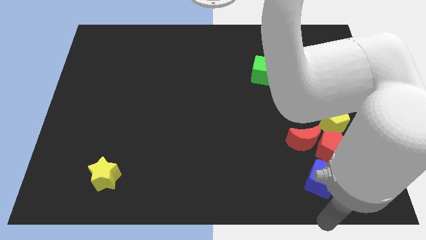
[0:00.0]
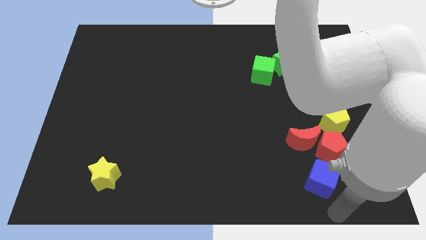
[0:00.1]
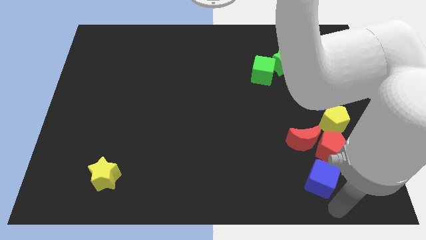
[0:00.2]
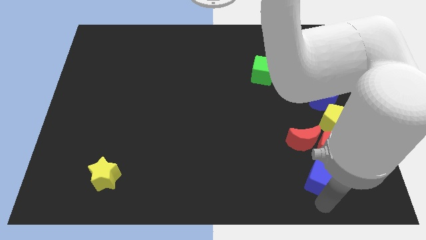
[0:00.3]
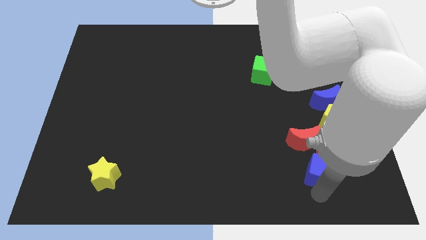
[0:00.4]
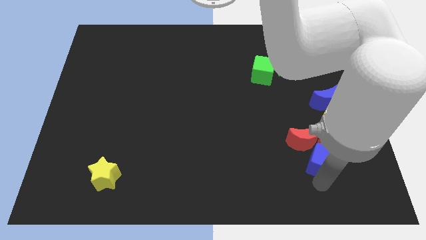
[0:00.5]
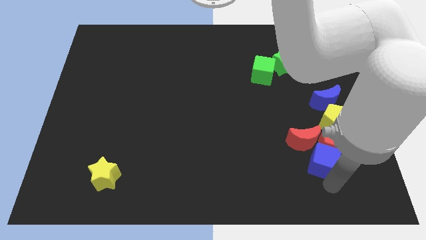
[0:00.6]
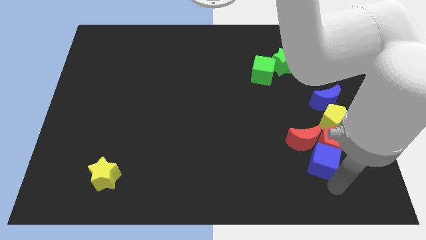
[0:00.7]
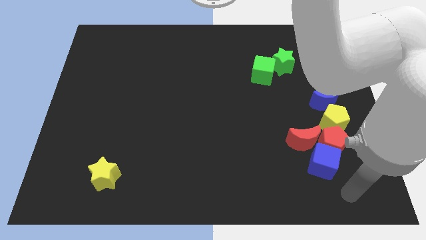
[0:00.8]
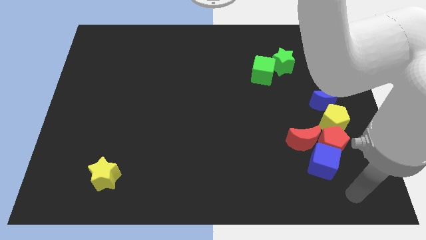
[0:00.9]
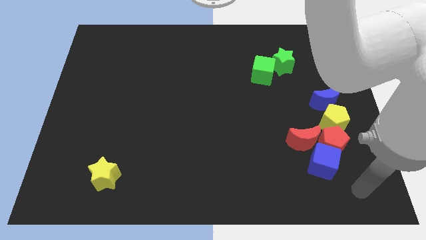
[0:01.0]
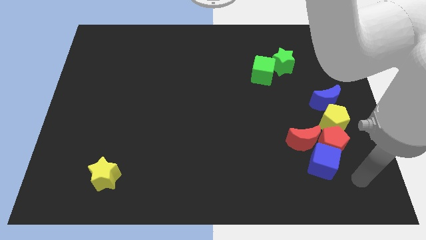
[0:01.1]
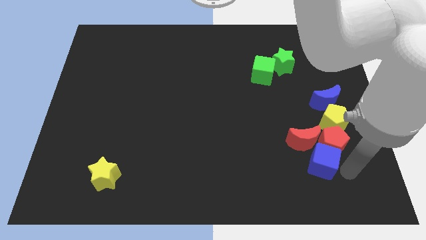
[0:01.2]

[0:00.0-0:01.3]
slide the blue cube into the red pentagon

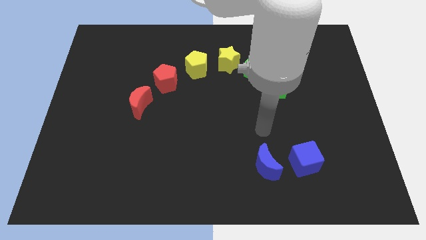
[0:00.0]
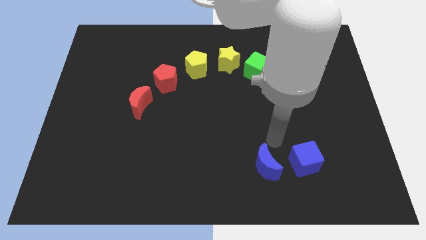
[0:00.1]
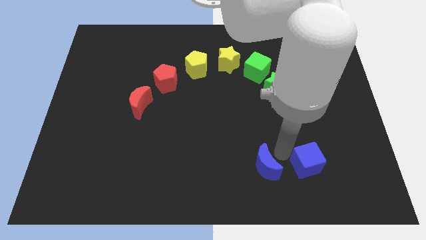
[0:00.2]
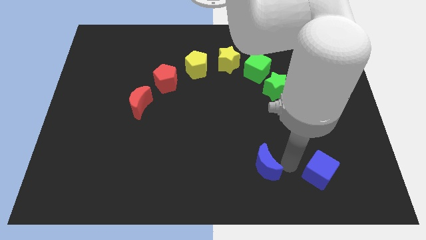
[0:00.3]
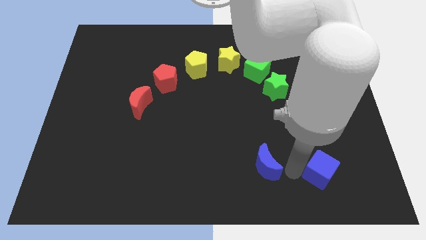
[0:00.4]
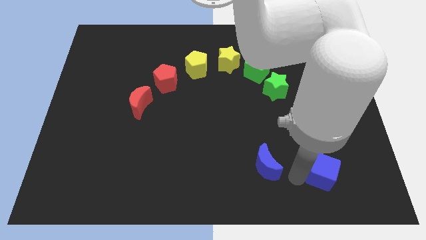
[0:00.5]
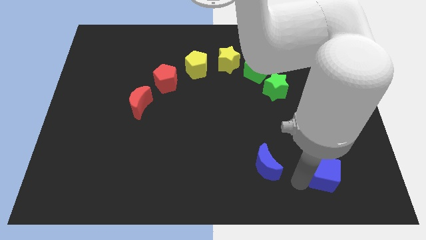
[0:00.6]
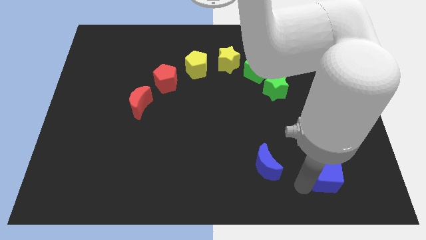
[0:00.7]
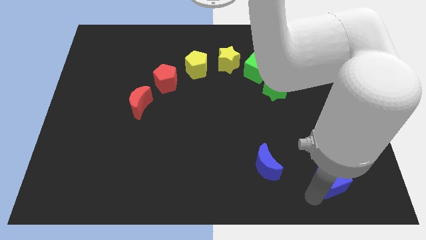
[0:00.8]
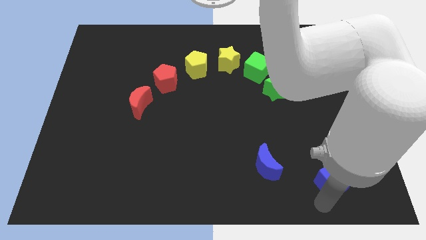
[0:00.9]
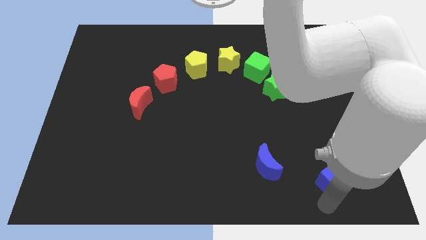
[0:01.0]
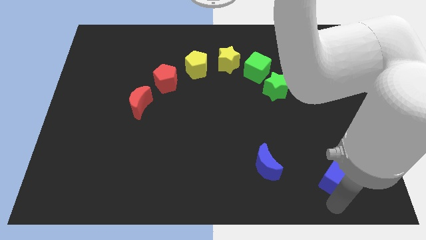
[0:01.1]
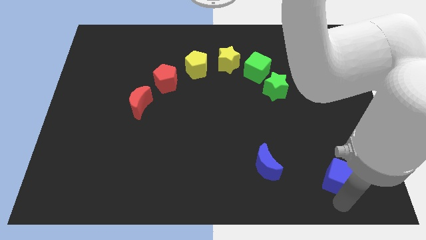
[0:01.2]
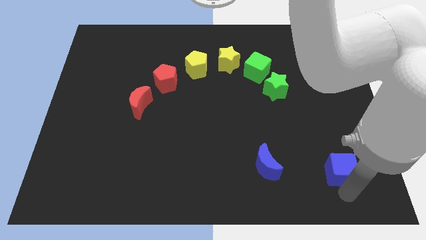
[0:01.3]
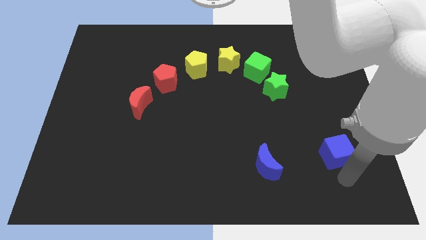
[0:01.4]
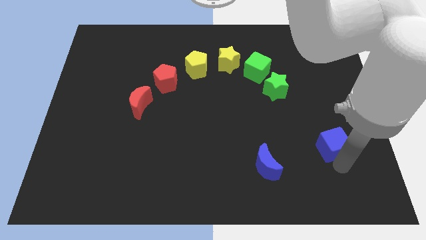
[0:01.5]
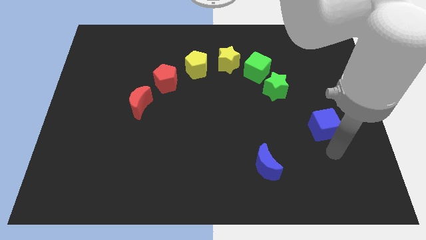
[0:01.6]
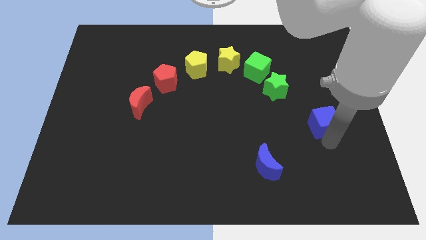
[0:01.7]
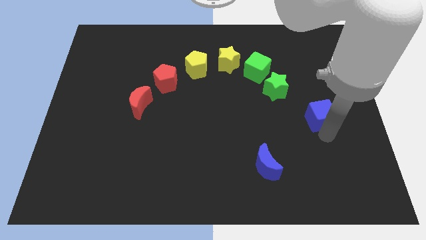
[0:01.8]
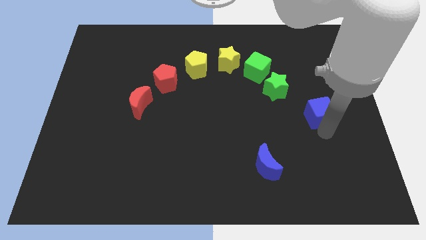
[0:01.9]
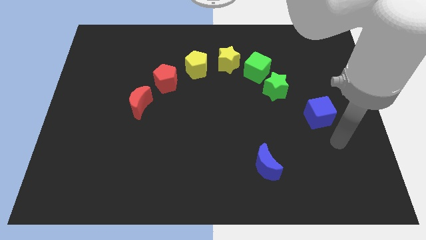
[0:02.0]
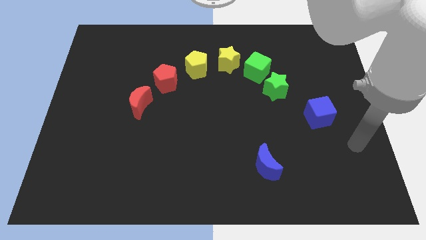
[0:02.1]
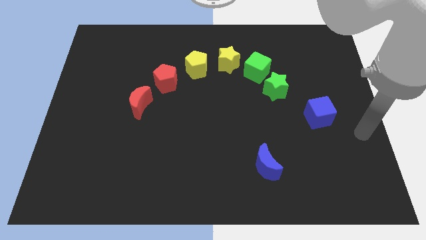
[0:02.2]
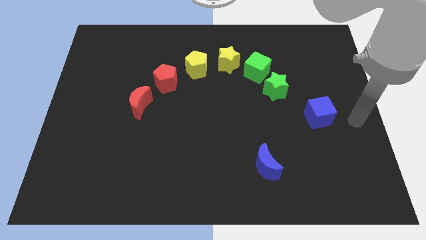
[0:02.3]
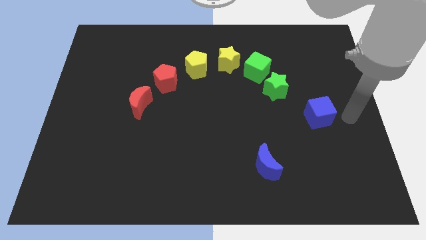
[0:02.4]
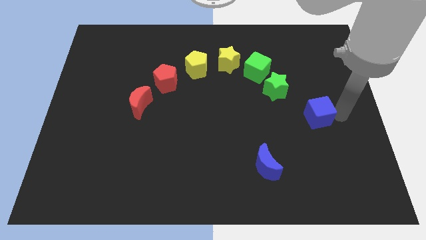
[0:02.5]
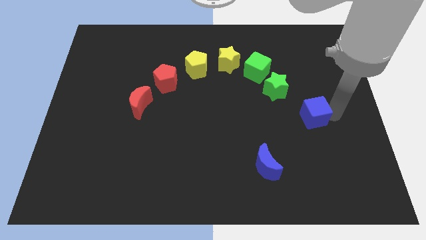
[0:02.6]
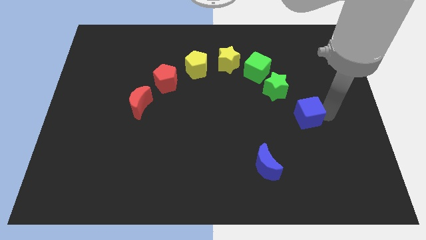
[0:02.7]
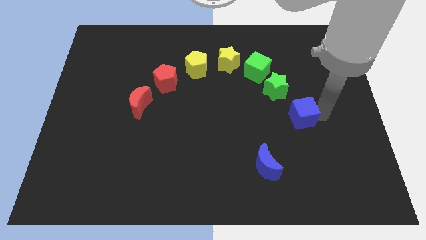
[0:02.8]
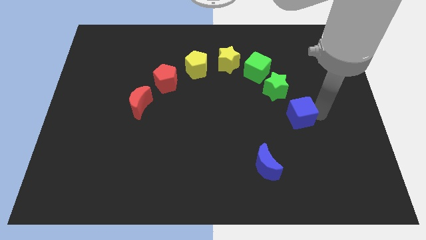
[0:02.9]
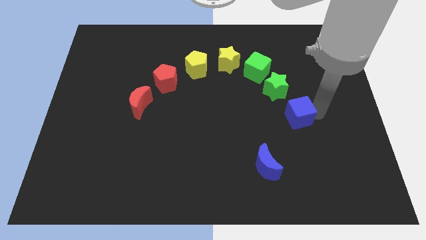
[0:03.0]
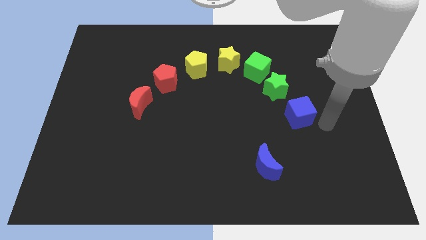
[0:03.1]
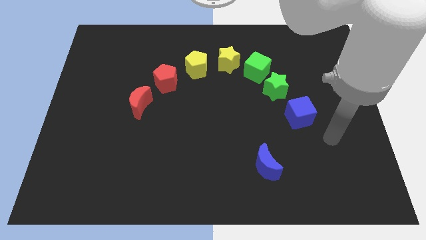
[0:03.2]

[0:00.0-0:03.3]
move the blue cube to right side of green star

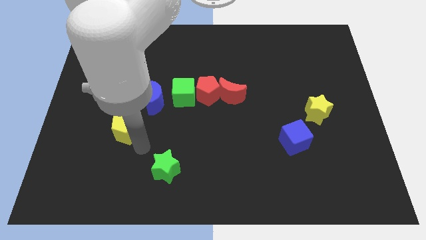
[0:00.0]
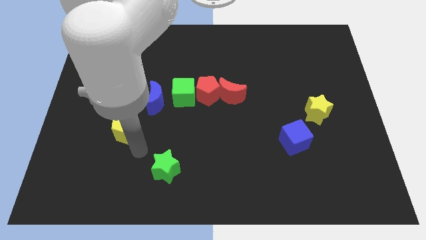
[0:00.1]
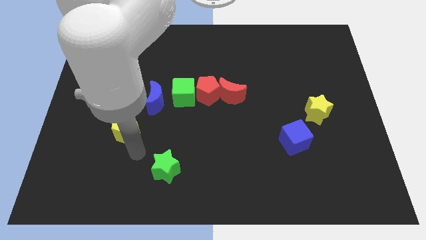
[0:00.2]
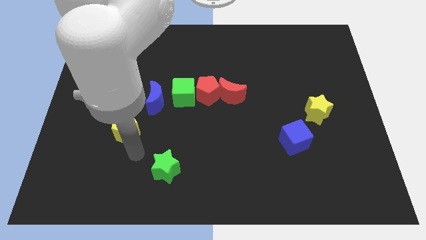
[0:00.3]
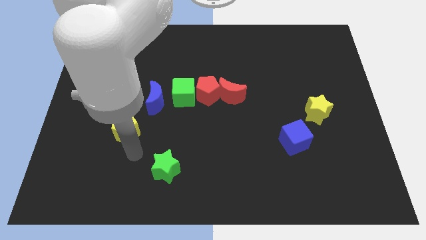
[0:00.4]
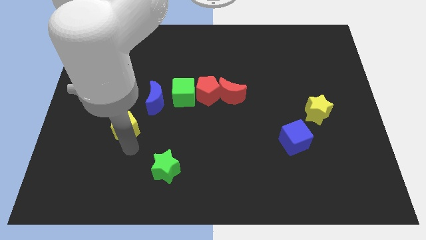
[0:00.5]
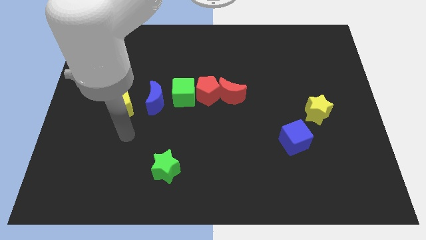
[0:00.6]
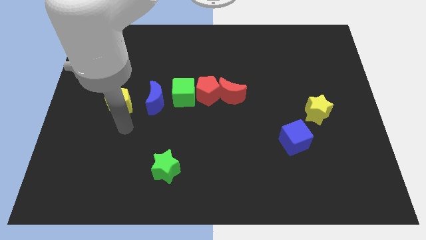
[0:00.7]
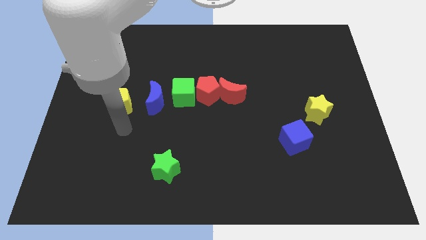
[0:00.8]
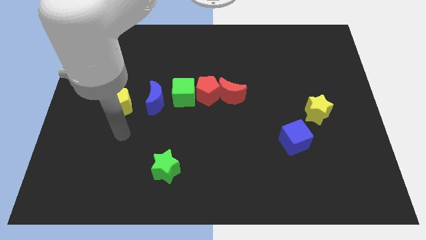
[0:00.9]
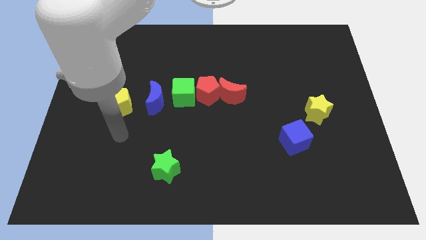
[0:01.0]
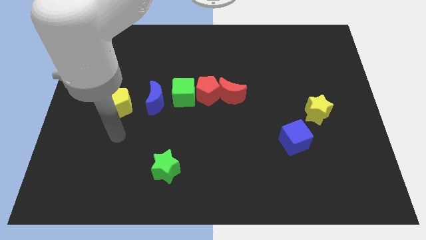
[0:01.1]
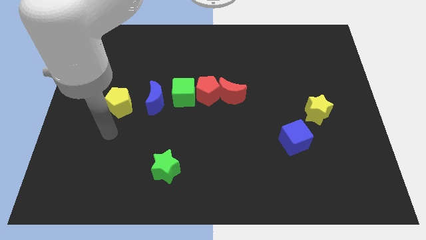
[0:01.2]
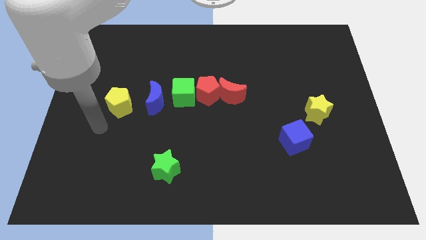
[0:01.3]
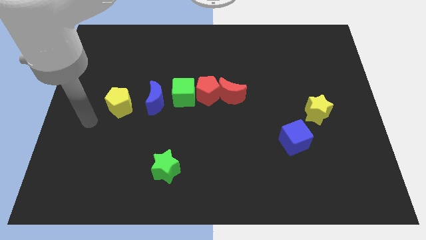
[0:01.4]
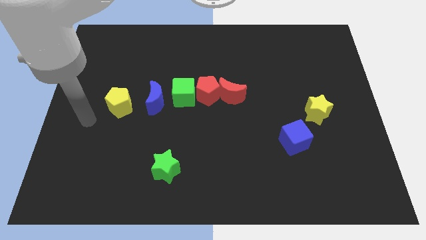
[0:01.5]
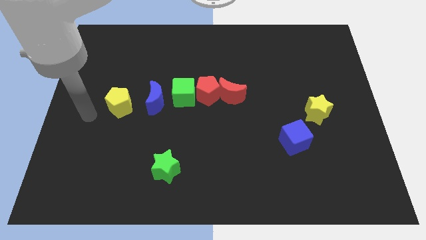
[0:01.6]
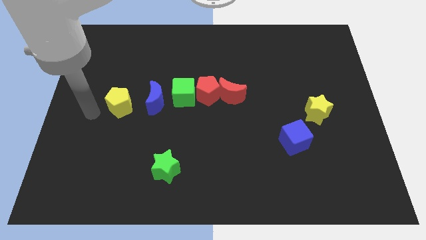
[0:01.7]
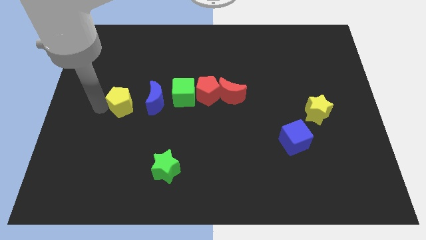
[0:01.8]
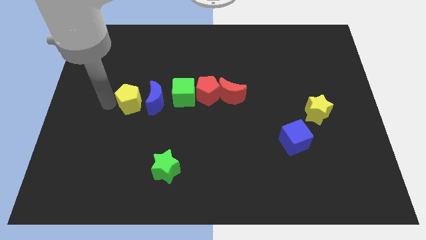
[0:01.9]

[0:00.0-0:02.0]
place the yellow pentagon left parallel to blue crescent

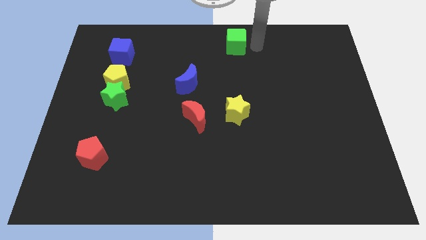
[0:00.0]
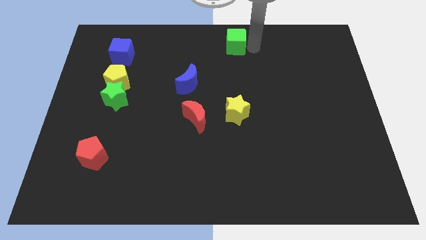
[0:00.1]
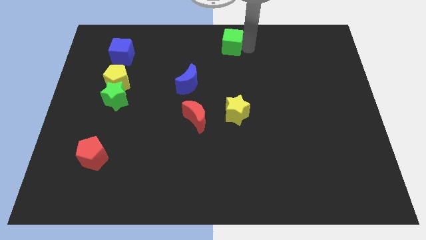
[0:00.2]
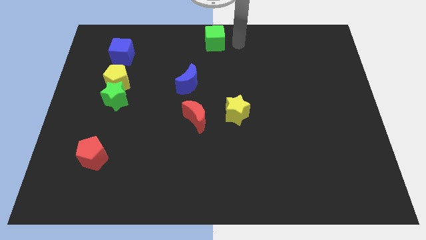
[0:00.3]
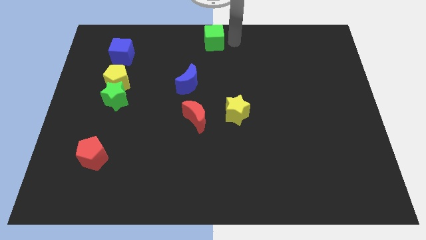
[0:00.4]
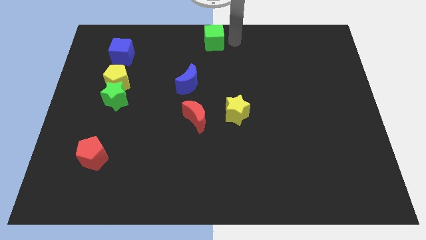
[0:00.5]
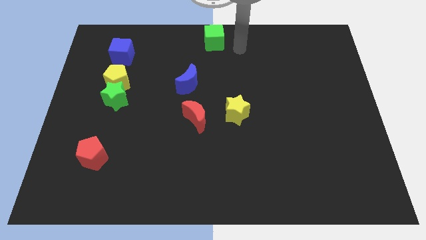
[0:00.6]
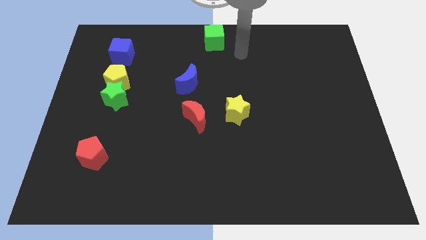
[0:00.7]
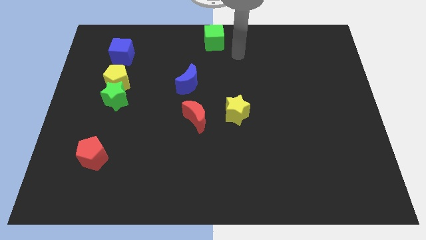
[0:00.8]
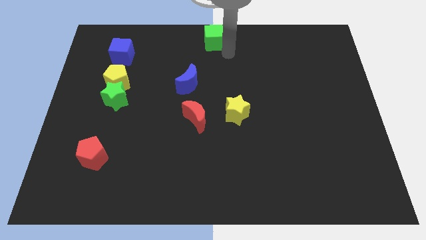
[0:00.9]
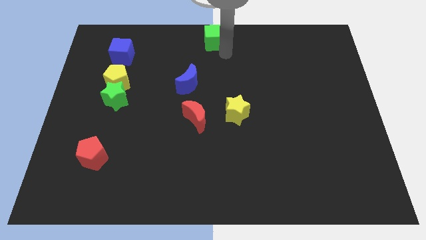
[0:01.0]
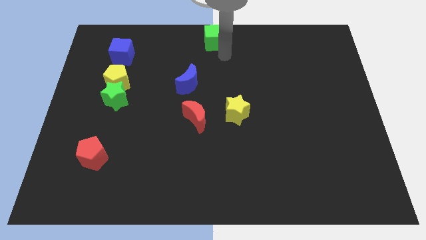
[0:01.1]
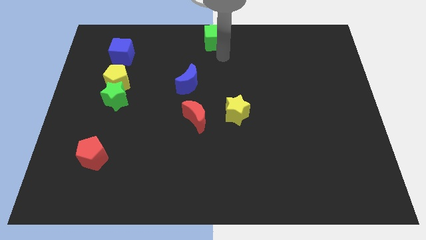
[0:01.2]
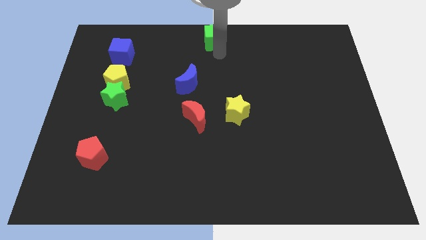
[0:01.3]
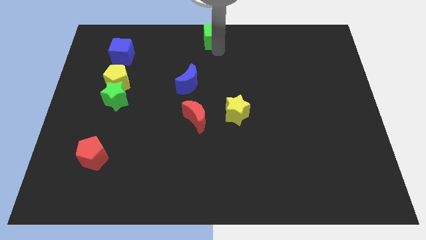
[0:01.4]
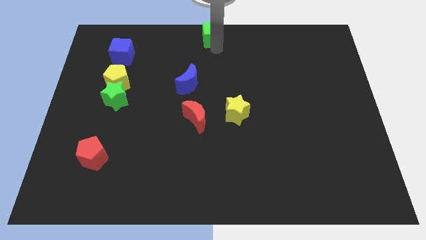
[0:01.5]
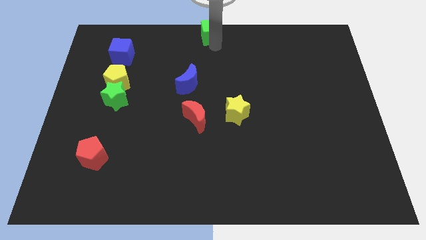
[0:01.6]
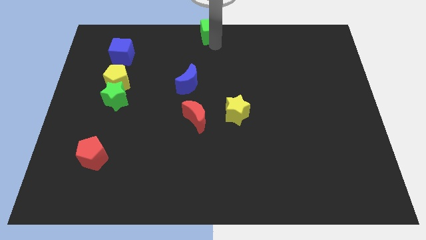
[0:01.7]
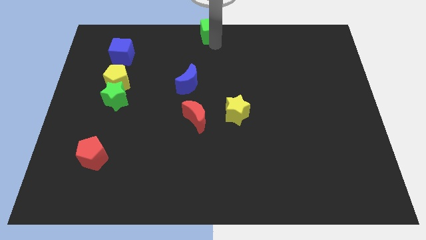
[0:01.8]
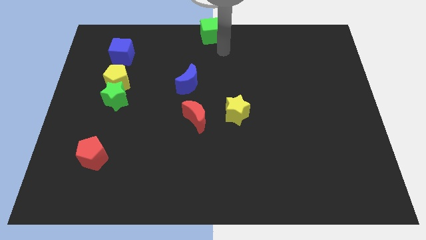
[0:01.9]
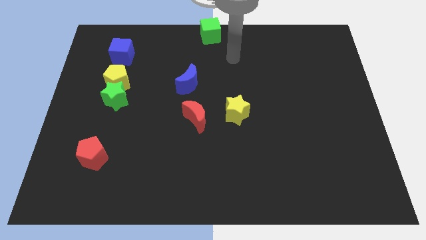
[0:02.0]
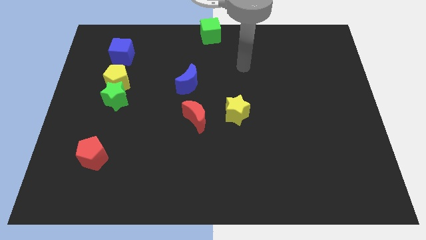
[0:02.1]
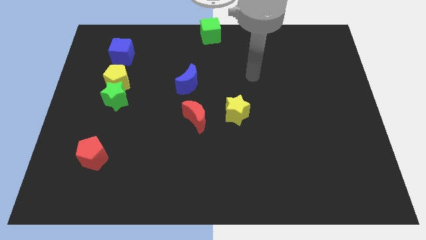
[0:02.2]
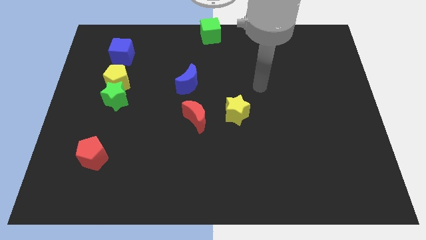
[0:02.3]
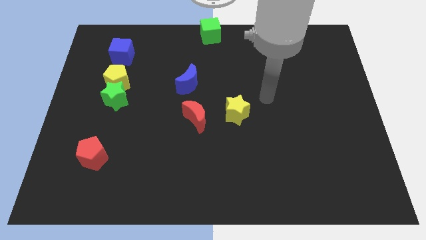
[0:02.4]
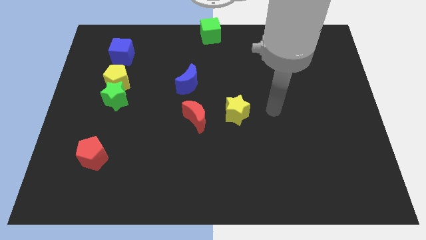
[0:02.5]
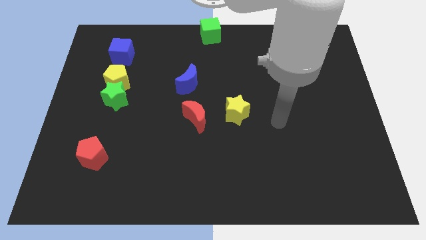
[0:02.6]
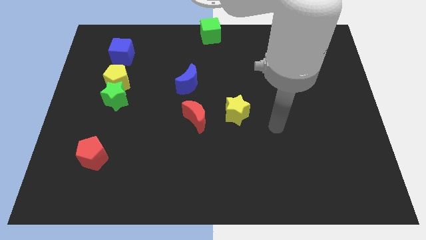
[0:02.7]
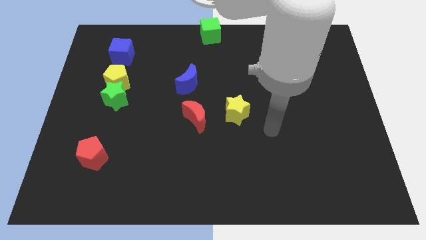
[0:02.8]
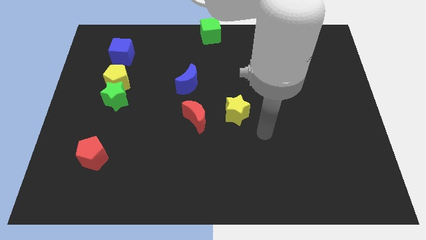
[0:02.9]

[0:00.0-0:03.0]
drag the green cube to top center of the board
